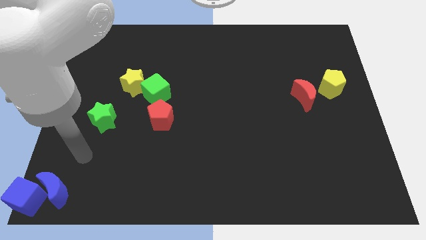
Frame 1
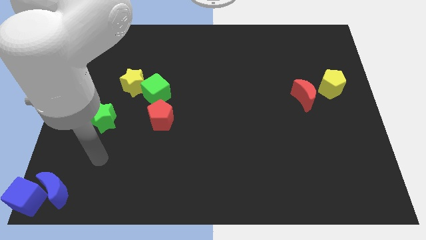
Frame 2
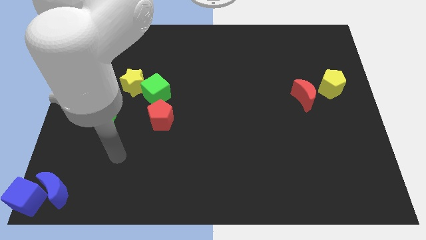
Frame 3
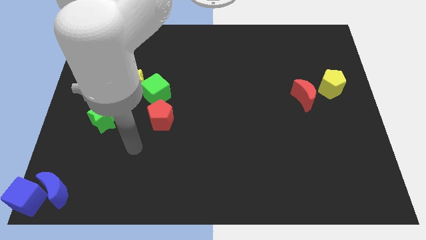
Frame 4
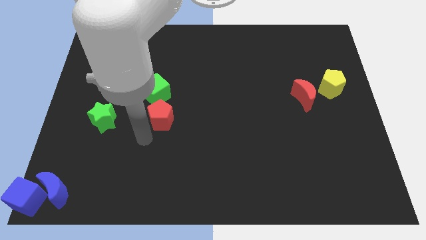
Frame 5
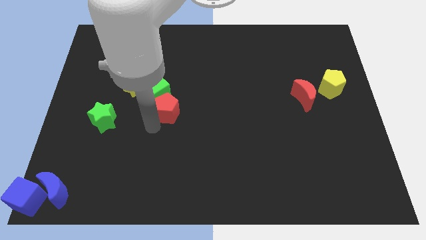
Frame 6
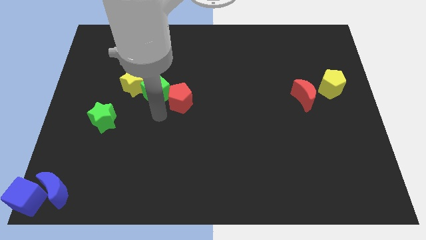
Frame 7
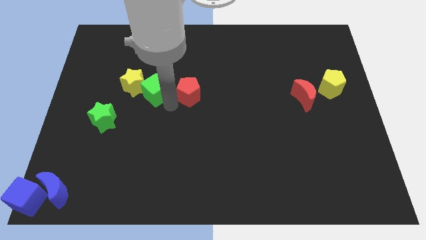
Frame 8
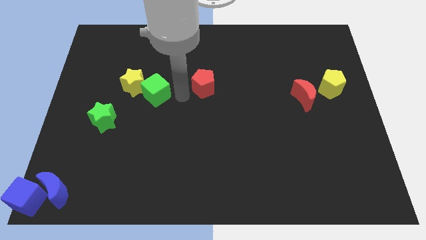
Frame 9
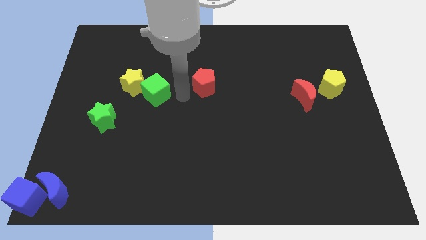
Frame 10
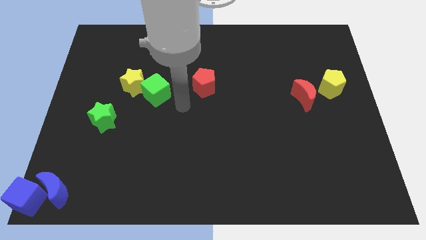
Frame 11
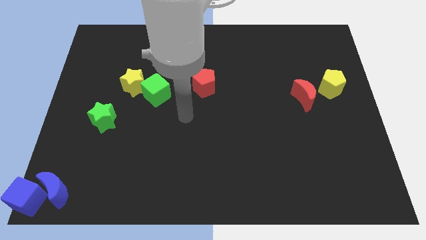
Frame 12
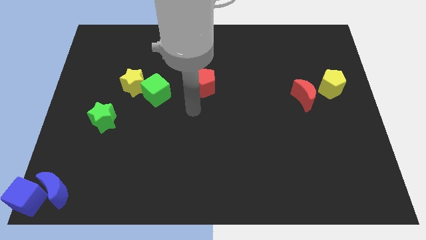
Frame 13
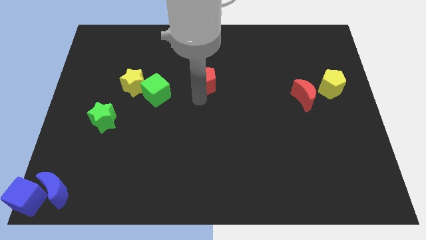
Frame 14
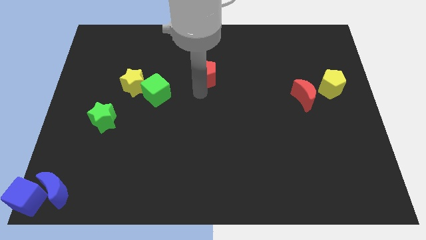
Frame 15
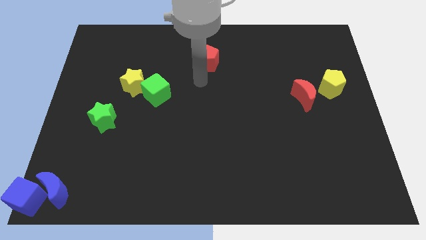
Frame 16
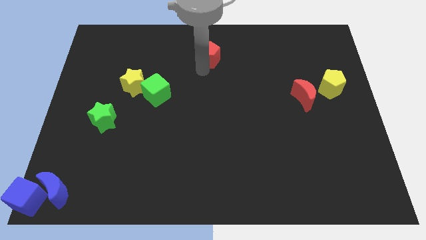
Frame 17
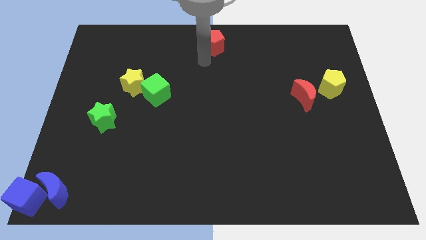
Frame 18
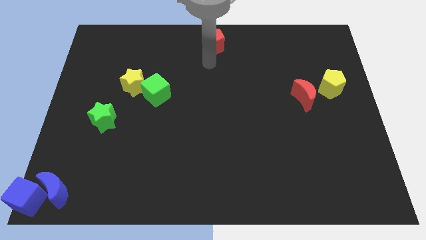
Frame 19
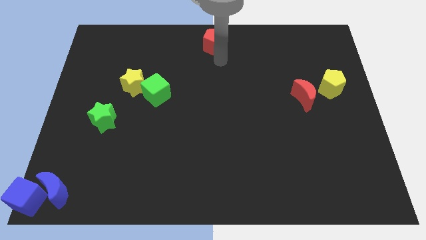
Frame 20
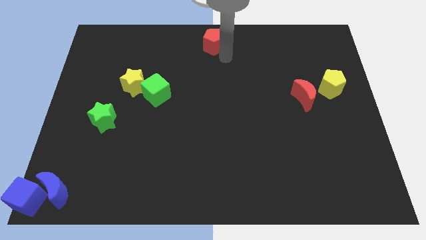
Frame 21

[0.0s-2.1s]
move the red pentagon to the top center

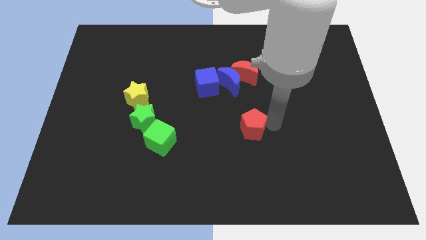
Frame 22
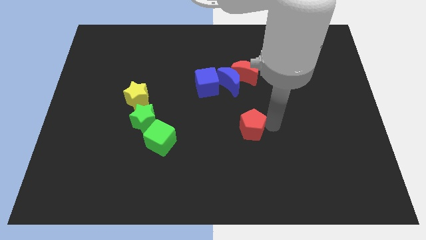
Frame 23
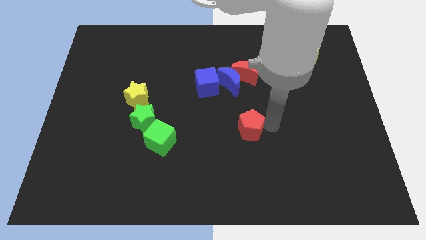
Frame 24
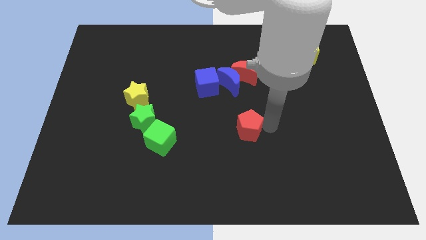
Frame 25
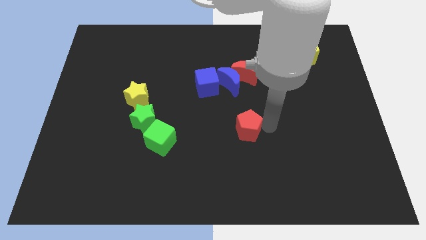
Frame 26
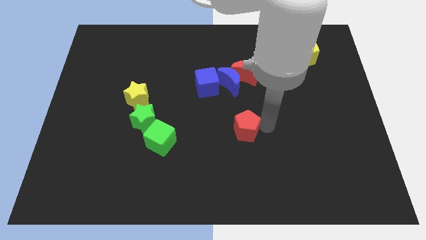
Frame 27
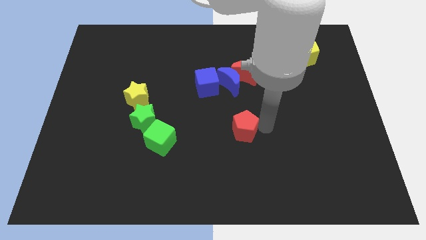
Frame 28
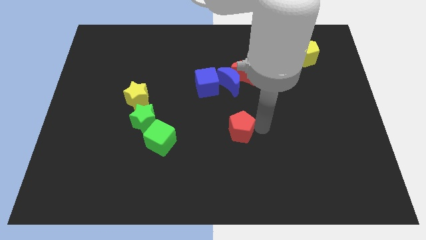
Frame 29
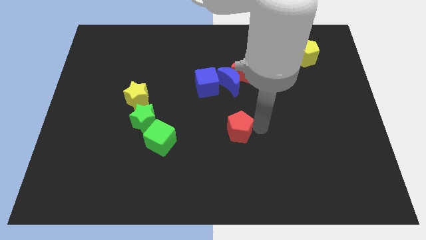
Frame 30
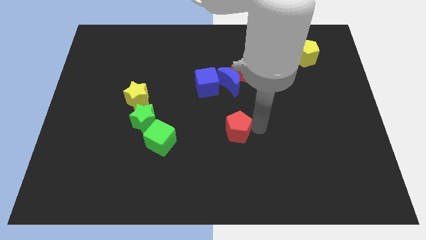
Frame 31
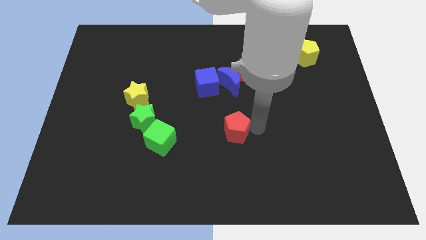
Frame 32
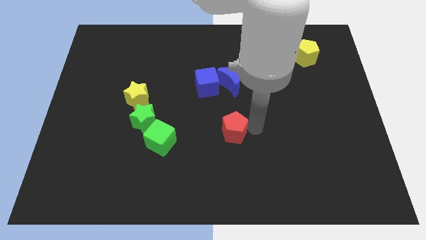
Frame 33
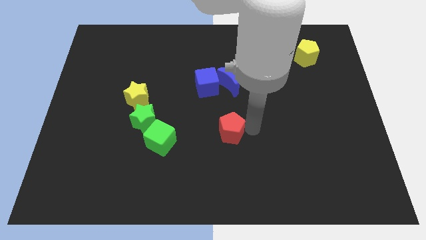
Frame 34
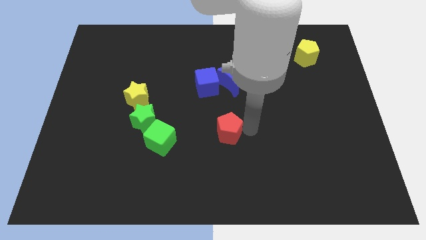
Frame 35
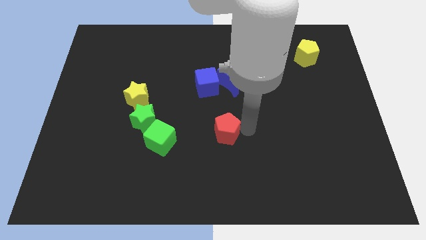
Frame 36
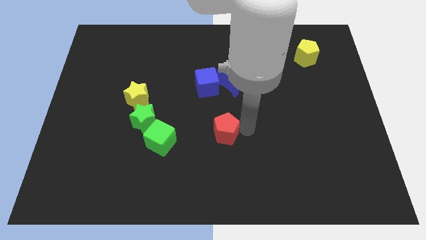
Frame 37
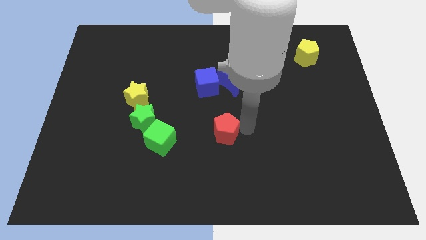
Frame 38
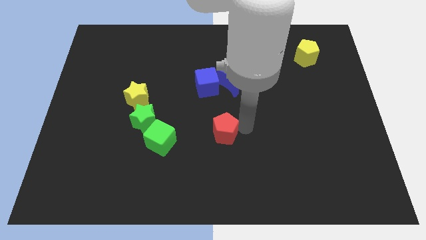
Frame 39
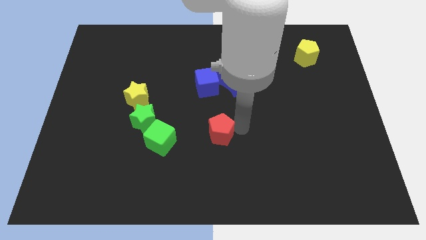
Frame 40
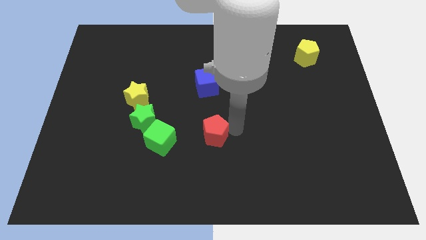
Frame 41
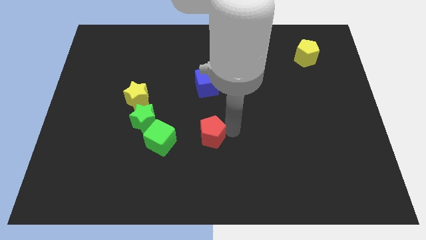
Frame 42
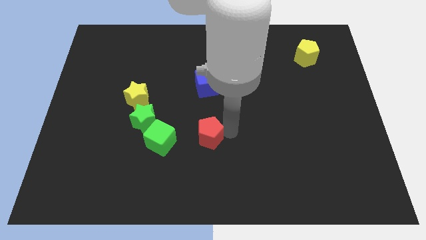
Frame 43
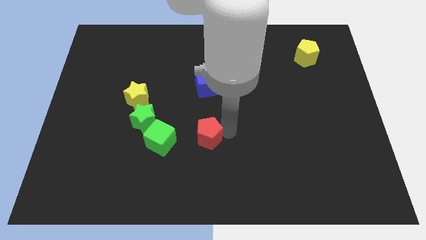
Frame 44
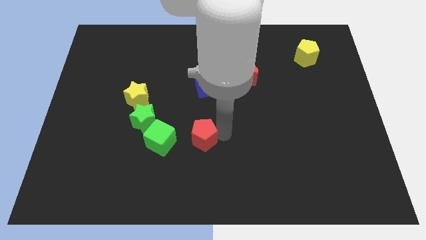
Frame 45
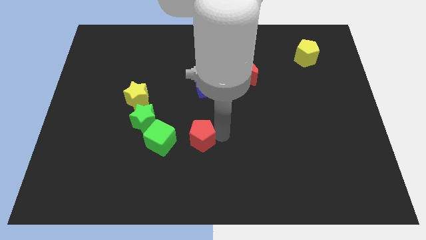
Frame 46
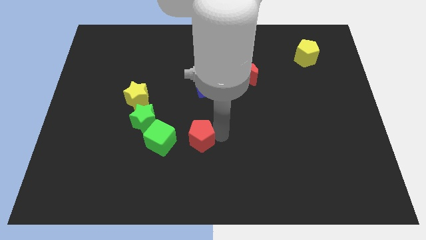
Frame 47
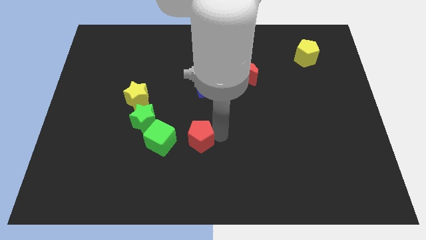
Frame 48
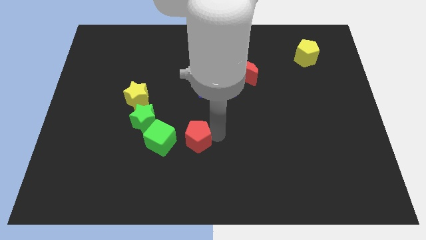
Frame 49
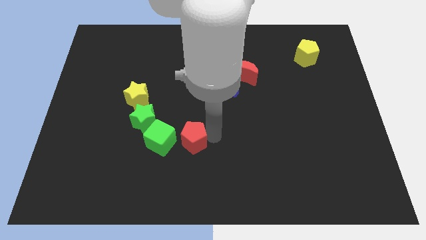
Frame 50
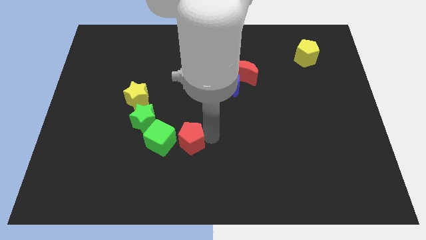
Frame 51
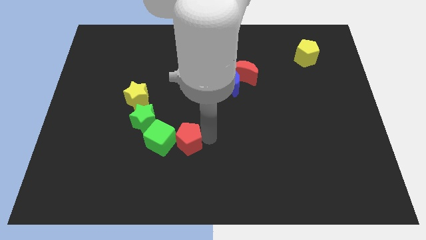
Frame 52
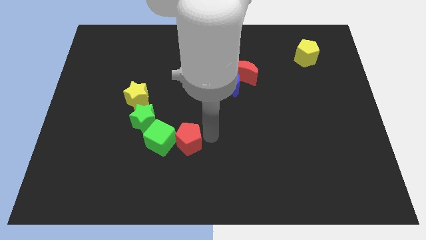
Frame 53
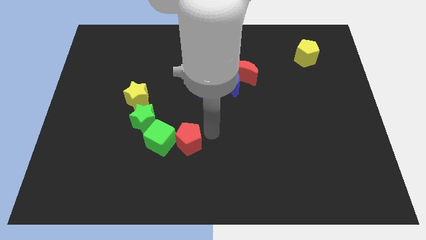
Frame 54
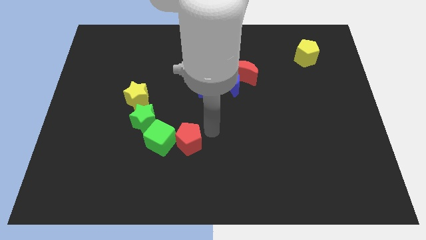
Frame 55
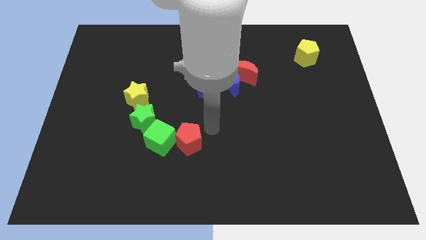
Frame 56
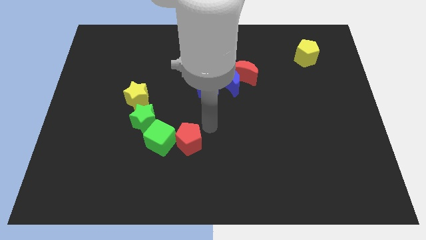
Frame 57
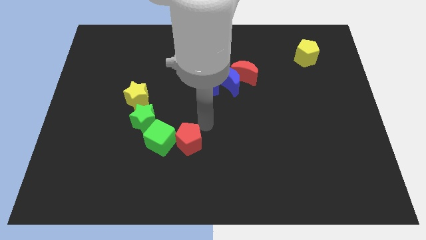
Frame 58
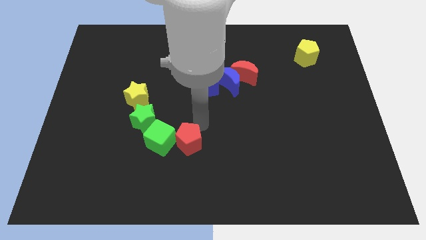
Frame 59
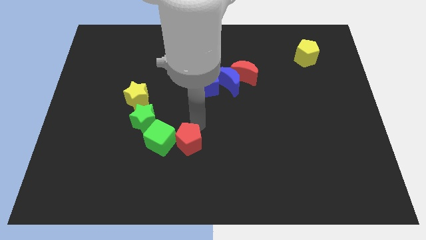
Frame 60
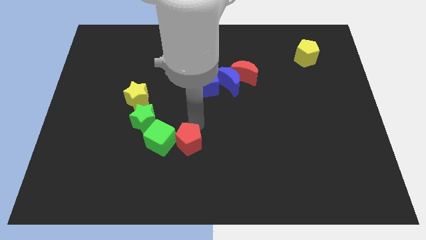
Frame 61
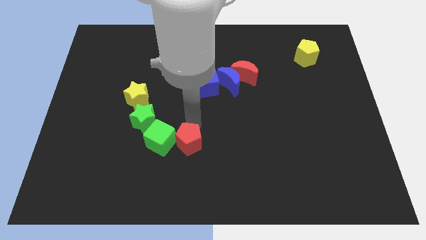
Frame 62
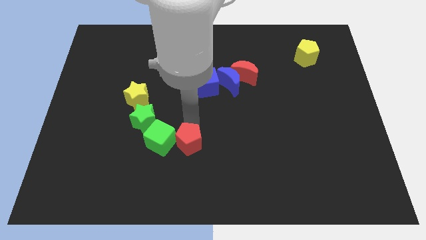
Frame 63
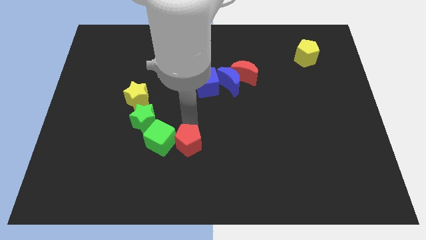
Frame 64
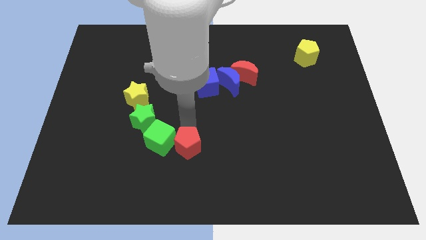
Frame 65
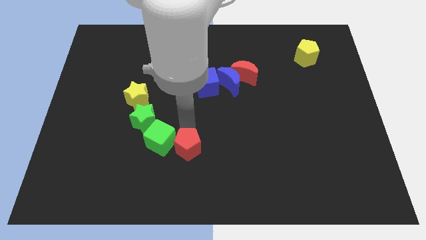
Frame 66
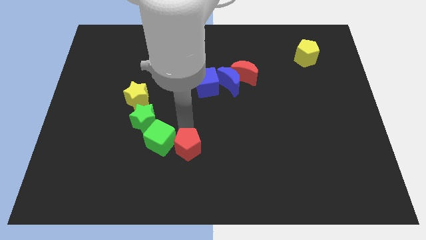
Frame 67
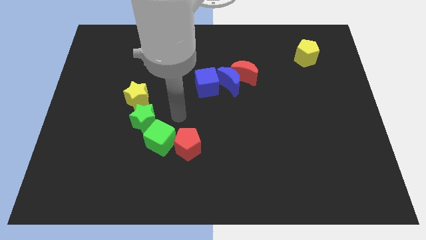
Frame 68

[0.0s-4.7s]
place the red pentagon to the right of the green cube

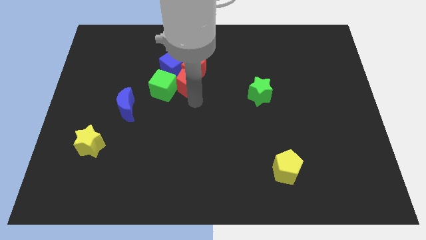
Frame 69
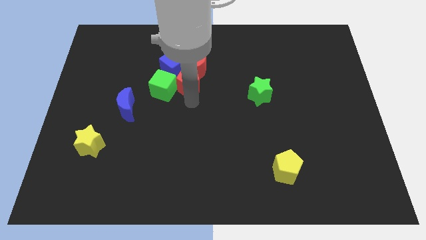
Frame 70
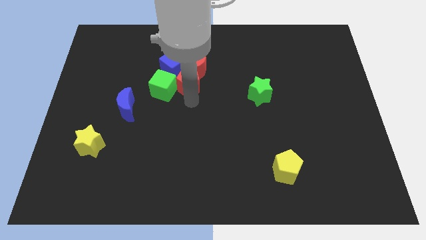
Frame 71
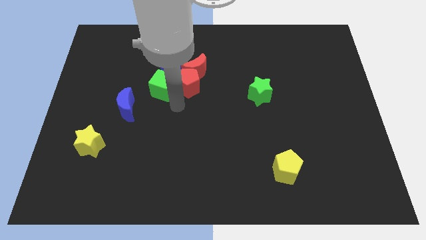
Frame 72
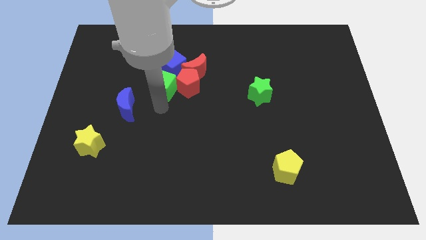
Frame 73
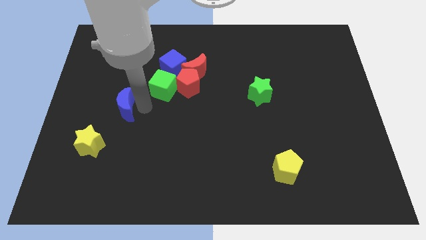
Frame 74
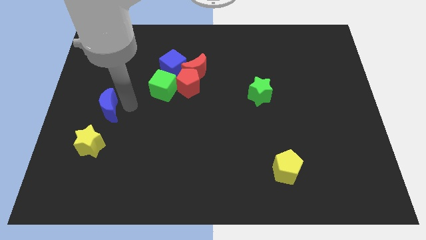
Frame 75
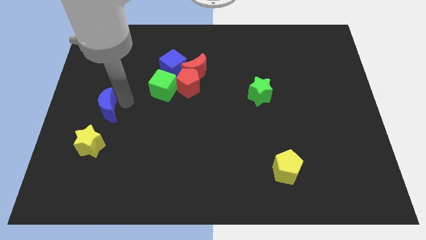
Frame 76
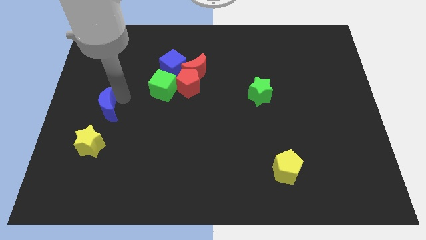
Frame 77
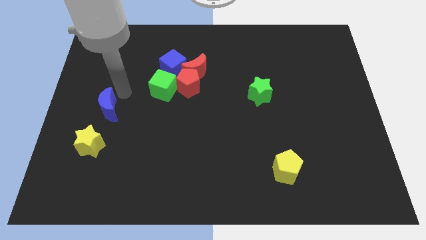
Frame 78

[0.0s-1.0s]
push the blue crescent slightly to the left

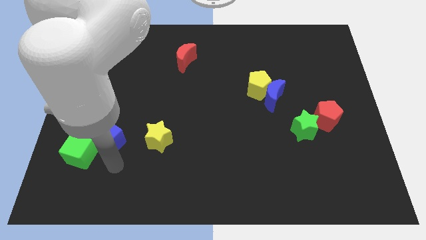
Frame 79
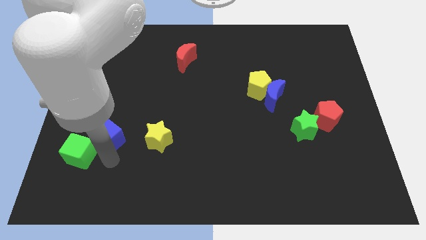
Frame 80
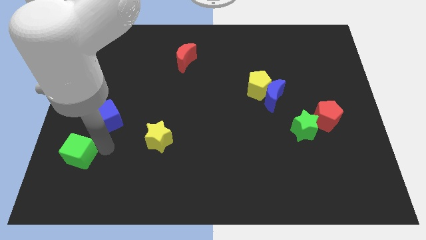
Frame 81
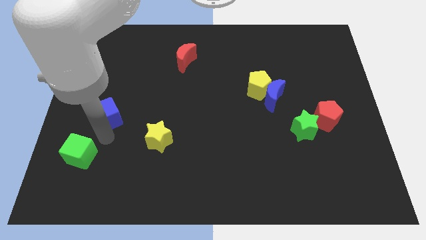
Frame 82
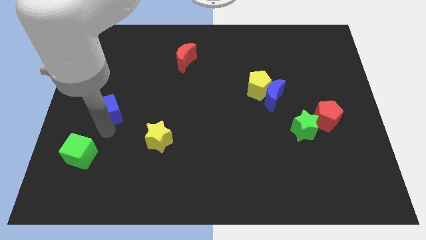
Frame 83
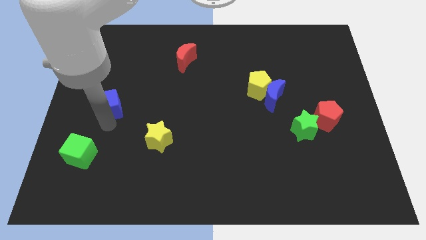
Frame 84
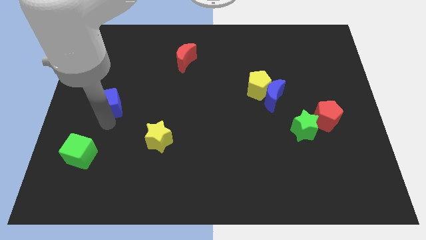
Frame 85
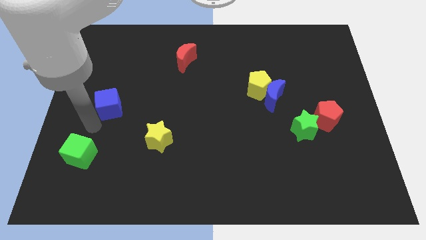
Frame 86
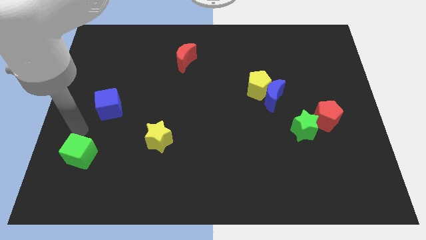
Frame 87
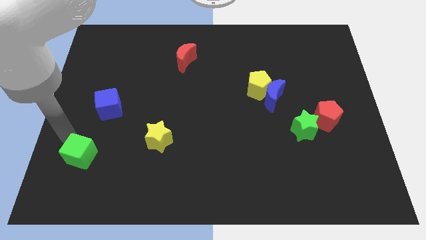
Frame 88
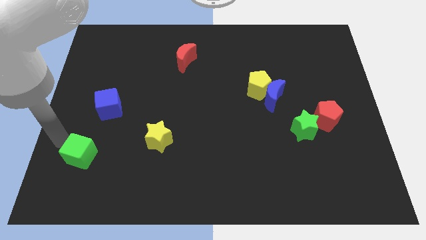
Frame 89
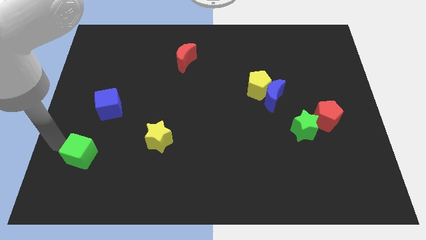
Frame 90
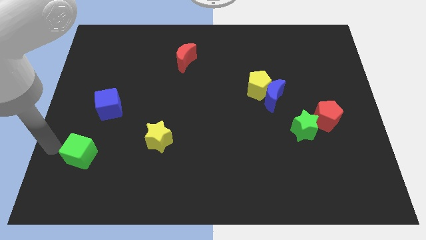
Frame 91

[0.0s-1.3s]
push the blue cube upward
